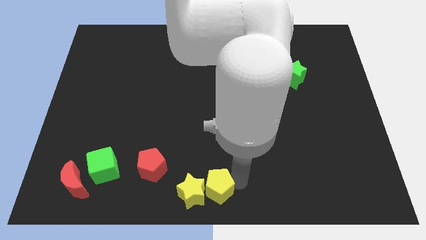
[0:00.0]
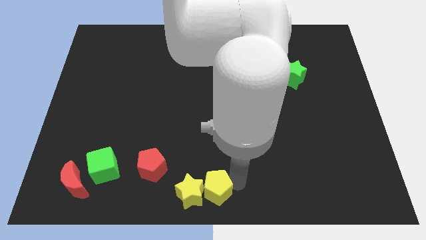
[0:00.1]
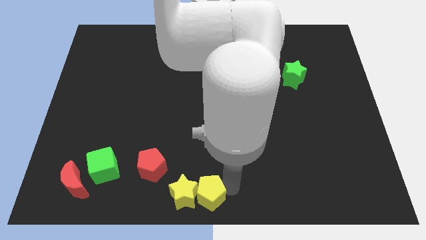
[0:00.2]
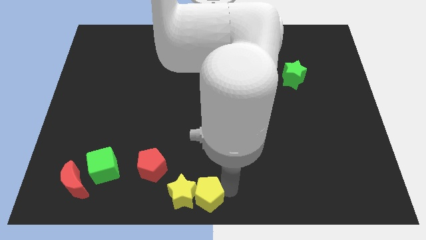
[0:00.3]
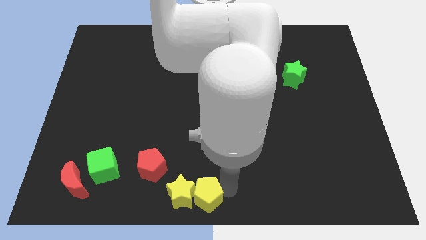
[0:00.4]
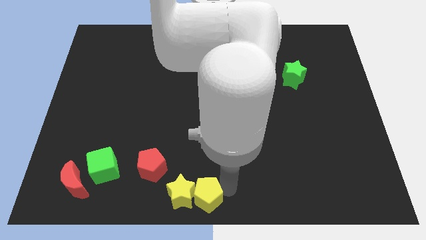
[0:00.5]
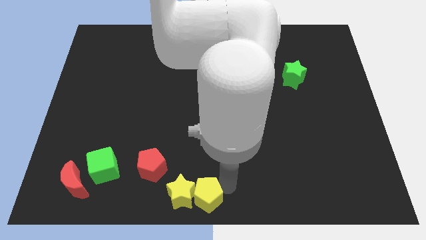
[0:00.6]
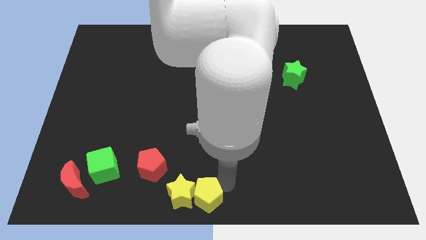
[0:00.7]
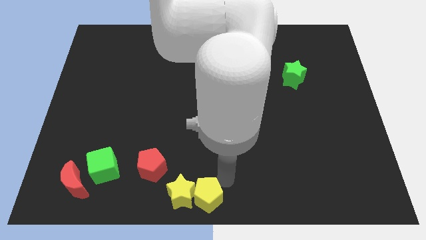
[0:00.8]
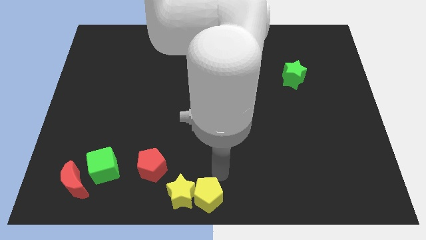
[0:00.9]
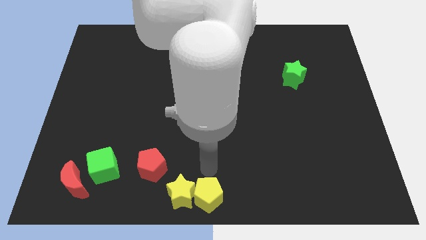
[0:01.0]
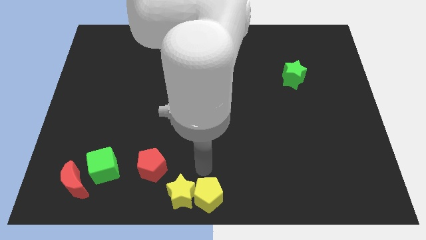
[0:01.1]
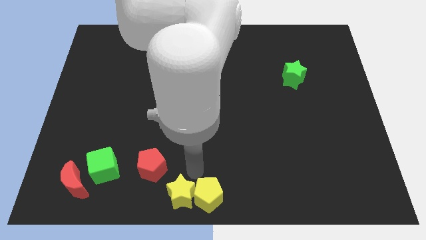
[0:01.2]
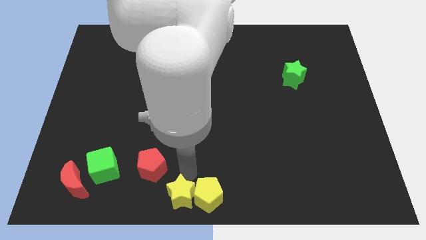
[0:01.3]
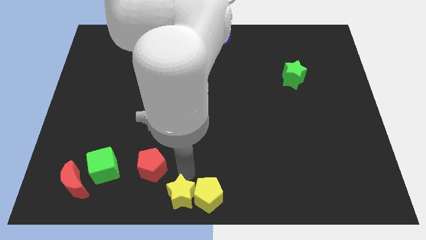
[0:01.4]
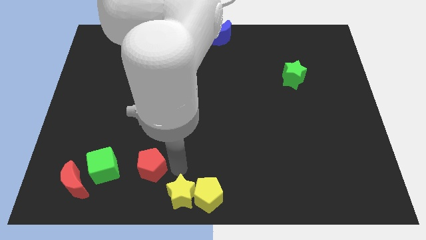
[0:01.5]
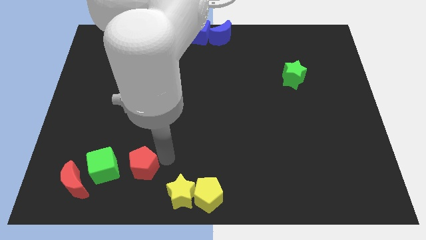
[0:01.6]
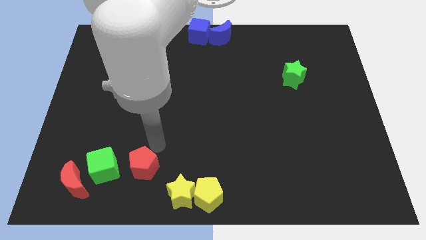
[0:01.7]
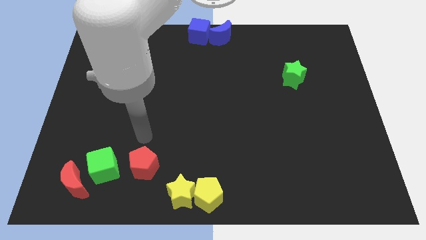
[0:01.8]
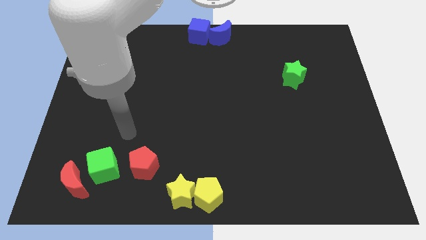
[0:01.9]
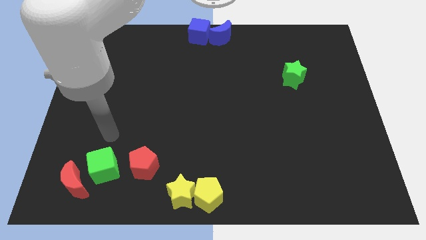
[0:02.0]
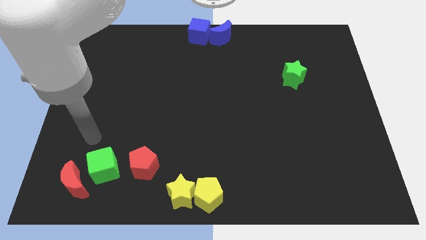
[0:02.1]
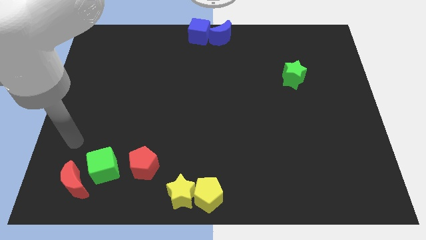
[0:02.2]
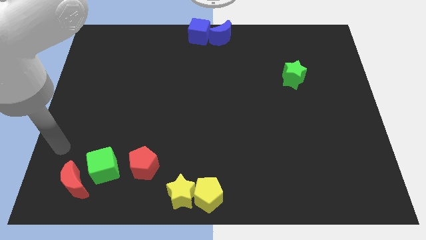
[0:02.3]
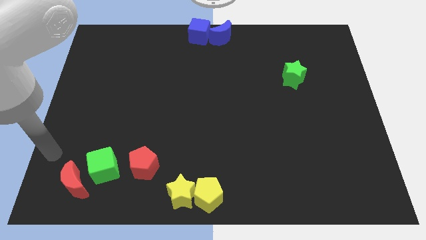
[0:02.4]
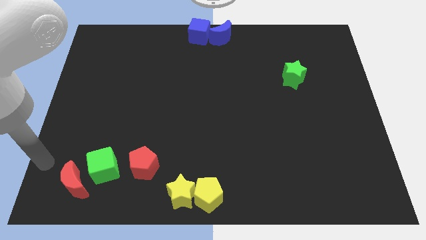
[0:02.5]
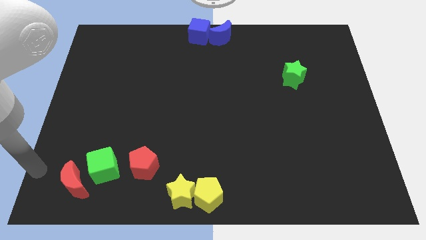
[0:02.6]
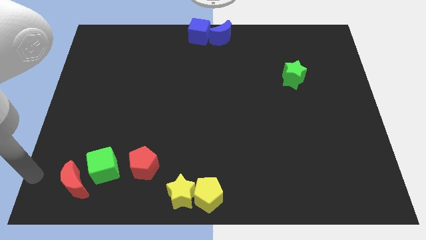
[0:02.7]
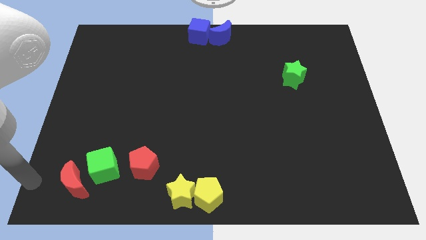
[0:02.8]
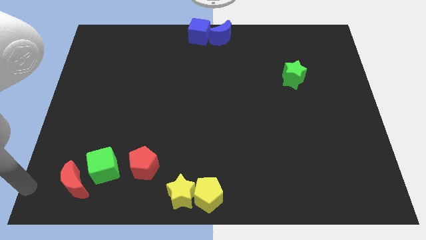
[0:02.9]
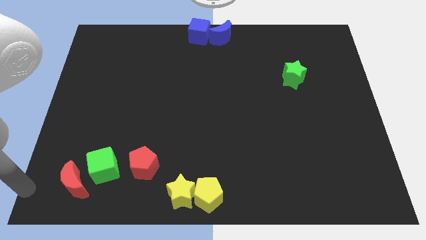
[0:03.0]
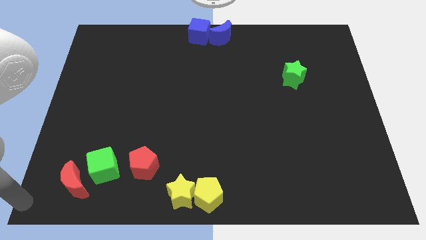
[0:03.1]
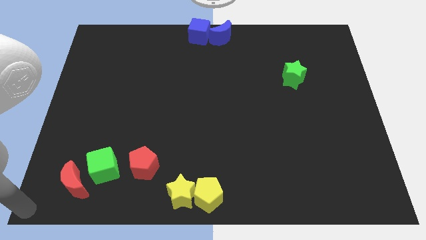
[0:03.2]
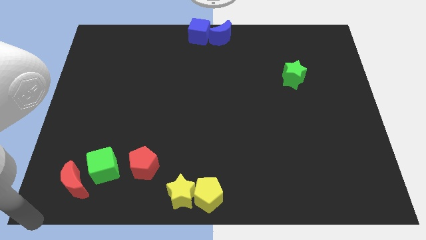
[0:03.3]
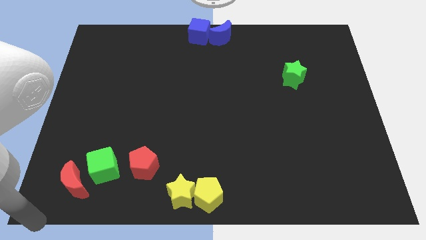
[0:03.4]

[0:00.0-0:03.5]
slightly touch the red pentagon

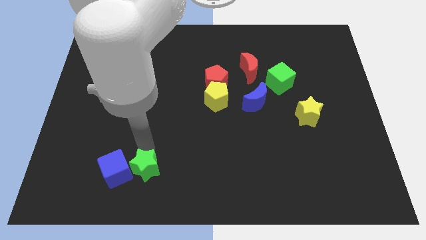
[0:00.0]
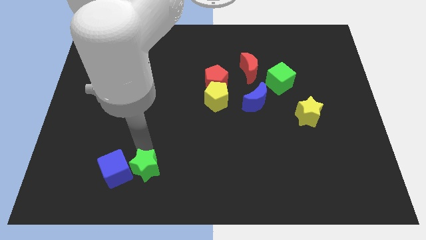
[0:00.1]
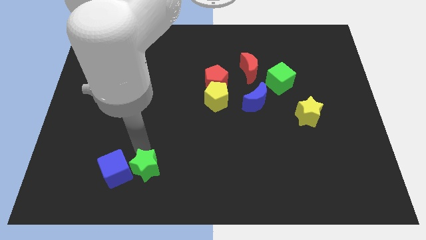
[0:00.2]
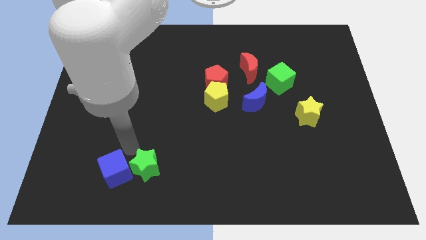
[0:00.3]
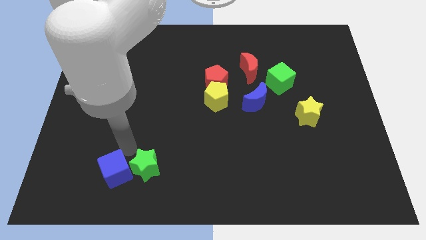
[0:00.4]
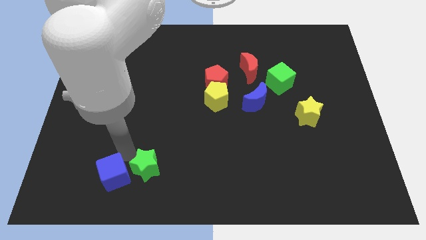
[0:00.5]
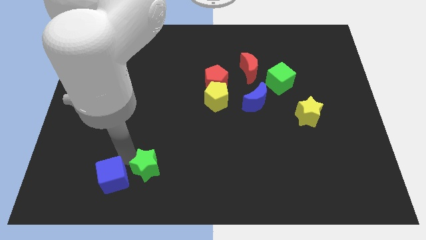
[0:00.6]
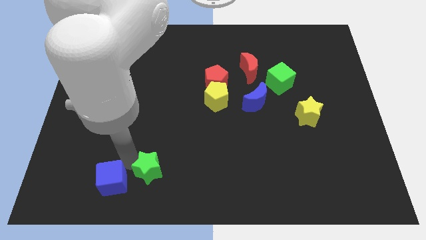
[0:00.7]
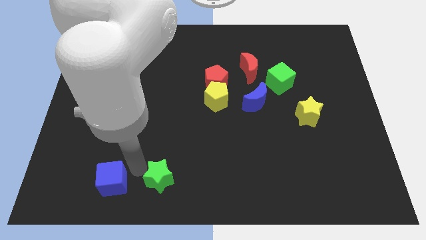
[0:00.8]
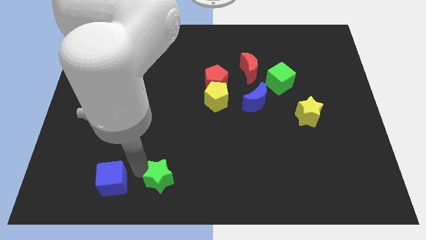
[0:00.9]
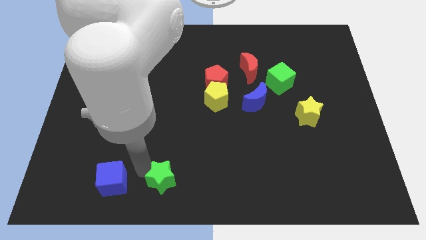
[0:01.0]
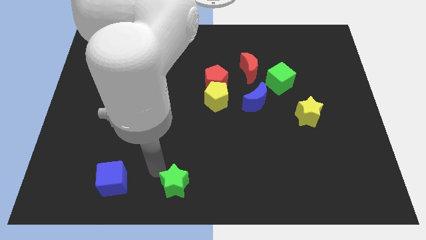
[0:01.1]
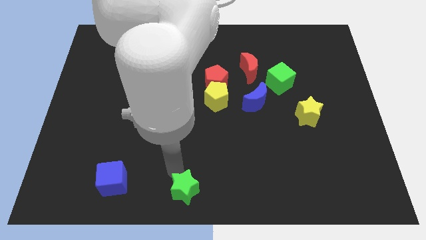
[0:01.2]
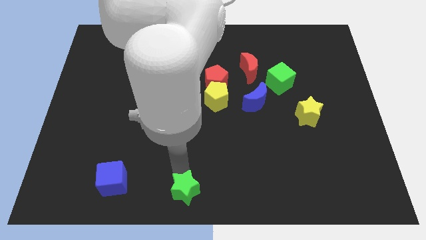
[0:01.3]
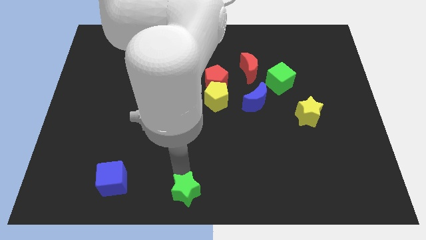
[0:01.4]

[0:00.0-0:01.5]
separate the green star from the blue cube

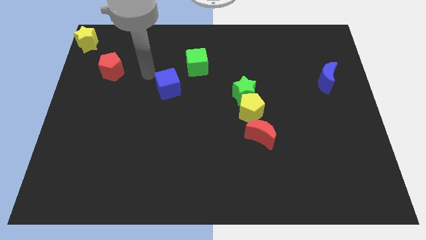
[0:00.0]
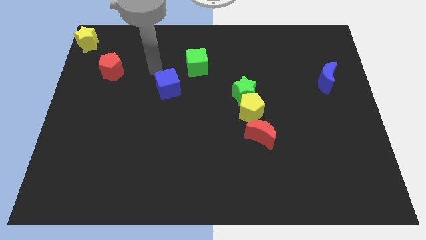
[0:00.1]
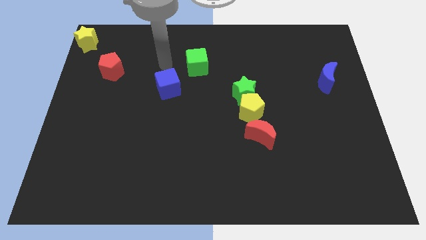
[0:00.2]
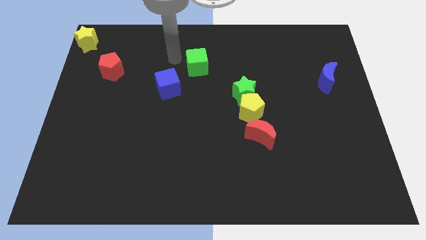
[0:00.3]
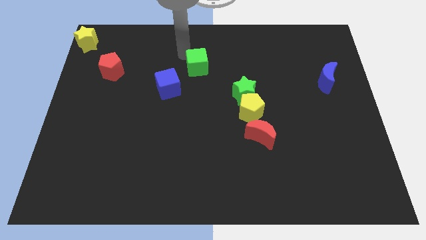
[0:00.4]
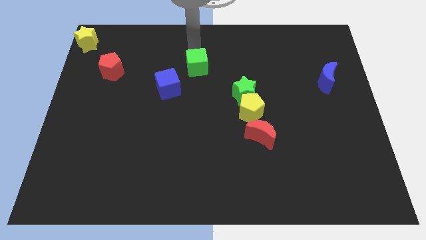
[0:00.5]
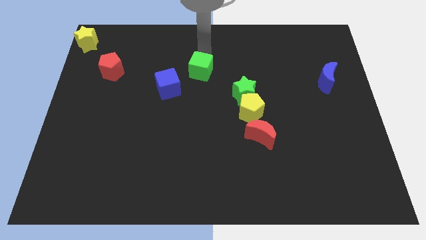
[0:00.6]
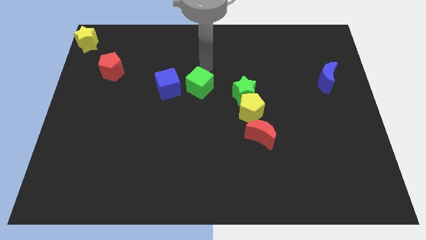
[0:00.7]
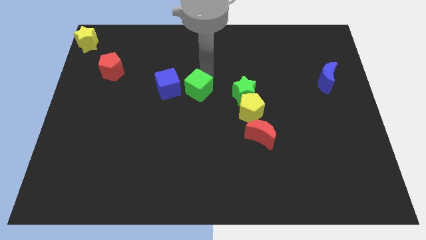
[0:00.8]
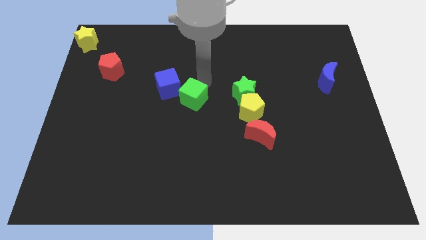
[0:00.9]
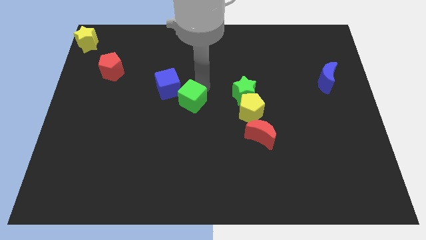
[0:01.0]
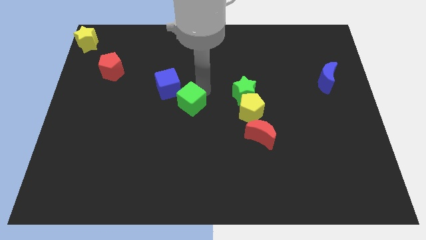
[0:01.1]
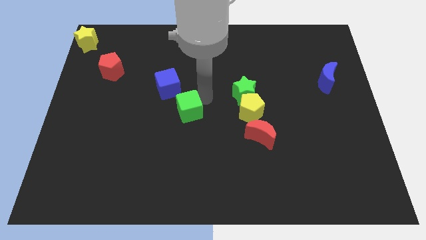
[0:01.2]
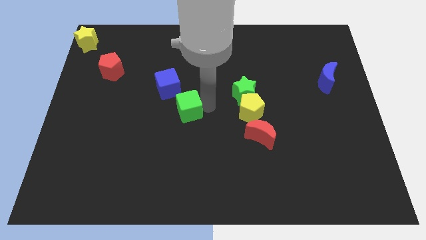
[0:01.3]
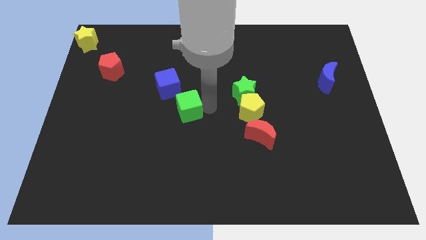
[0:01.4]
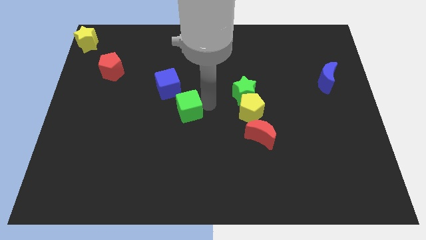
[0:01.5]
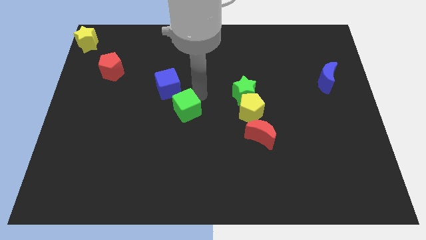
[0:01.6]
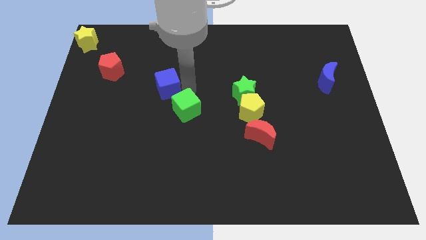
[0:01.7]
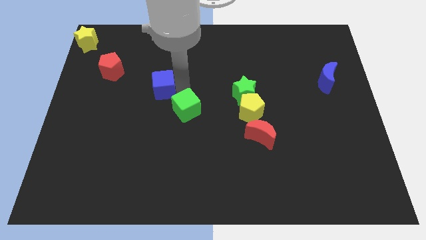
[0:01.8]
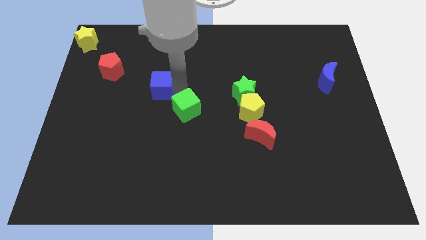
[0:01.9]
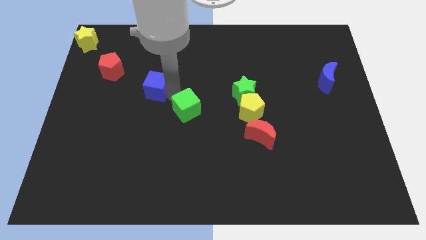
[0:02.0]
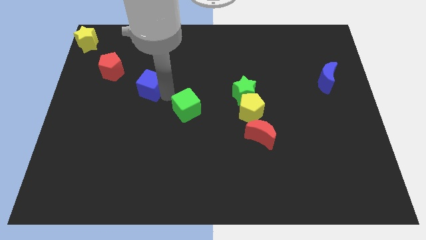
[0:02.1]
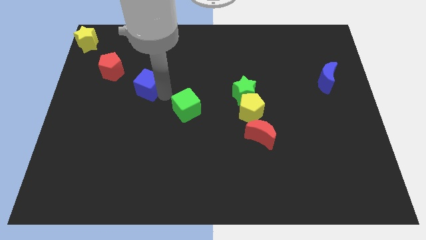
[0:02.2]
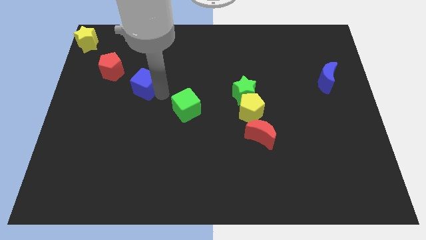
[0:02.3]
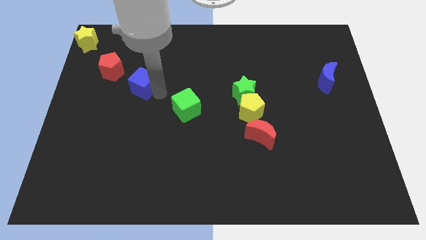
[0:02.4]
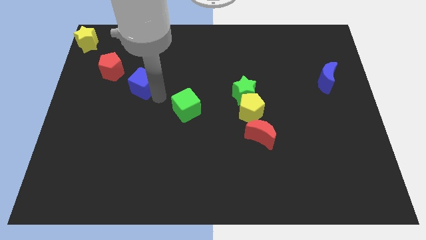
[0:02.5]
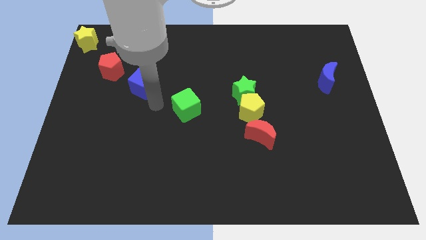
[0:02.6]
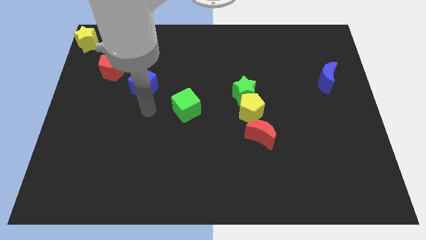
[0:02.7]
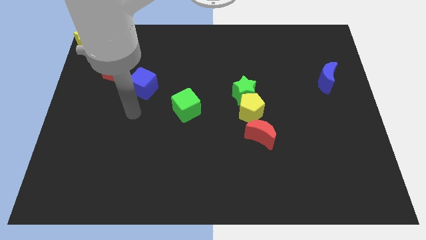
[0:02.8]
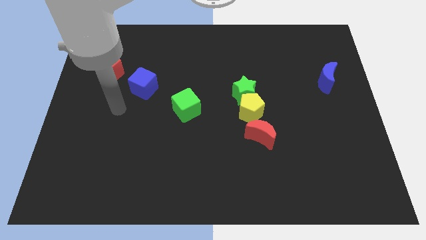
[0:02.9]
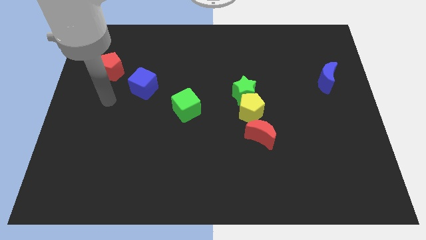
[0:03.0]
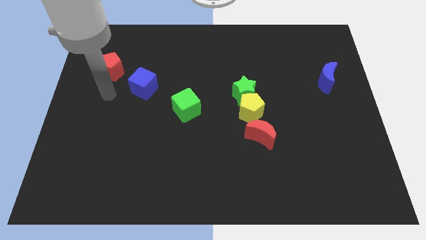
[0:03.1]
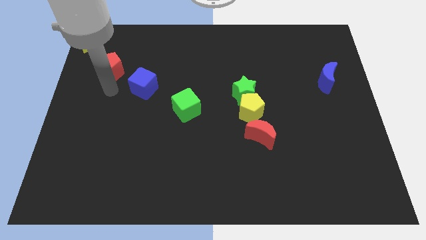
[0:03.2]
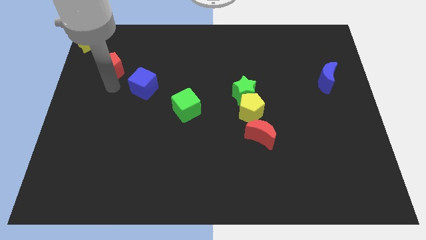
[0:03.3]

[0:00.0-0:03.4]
move the cubes to form a diagonal line towards left

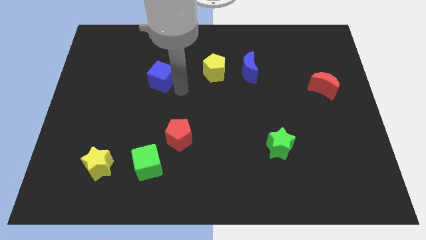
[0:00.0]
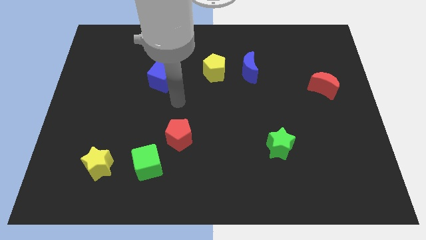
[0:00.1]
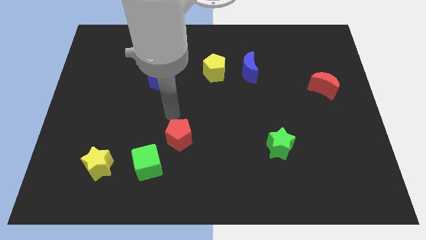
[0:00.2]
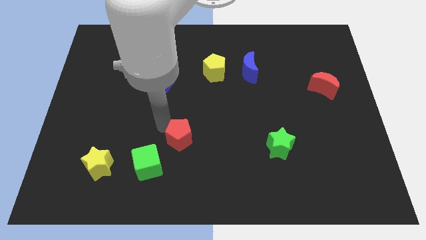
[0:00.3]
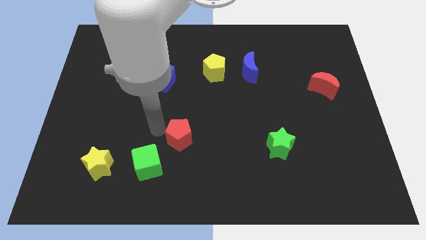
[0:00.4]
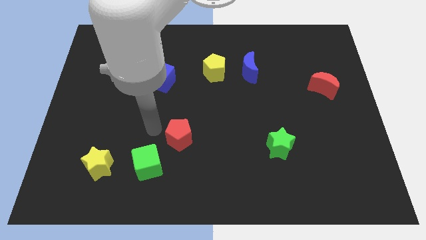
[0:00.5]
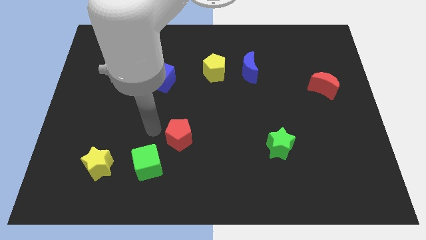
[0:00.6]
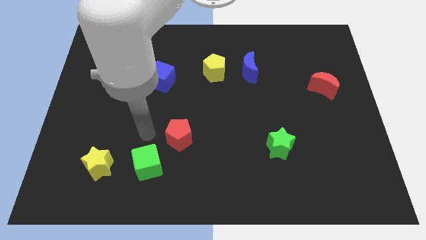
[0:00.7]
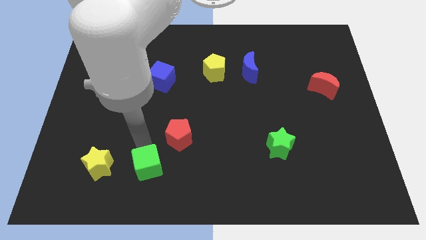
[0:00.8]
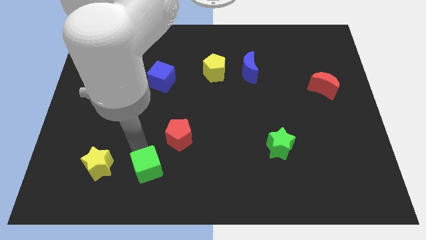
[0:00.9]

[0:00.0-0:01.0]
tap the top side of the green cube
